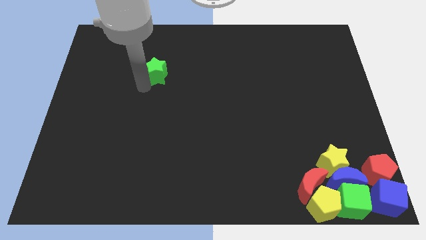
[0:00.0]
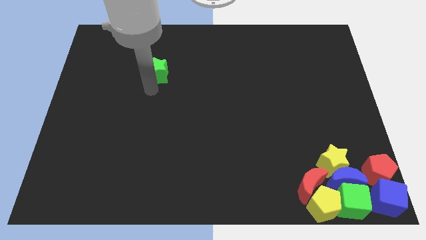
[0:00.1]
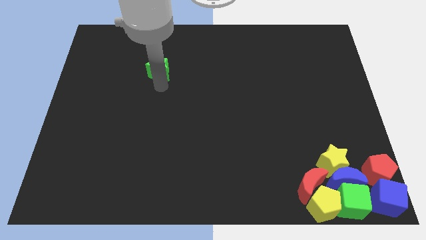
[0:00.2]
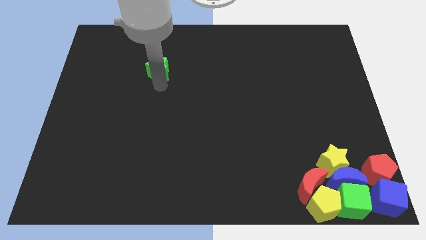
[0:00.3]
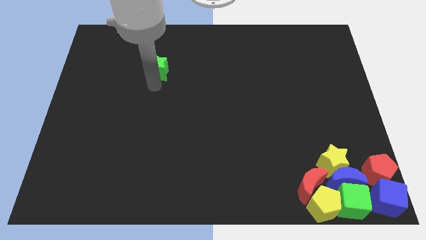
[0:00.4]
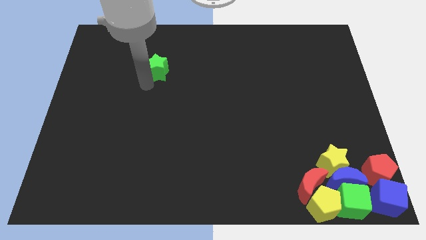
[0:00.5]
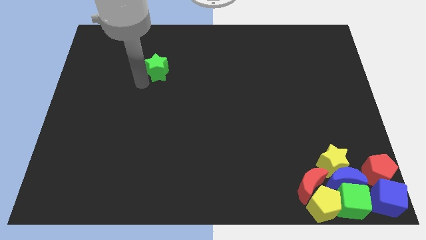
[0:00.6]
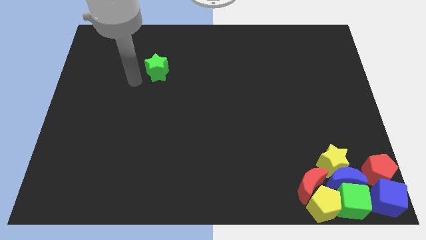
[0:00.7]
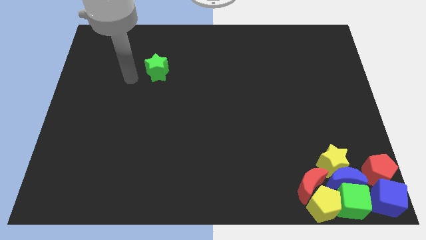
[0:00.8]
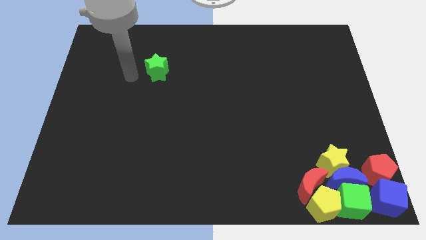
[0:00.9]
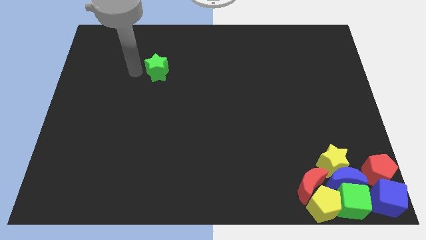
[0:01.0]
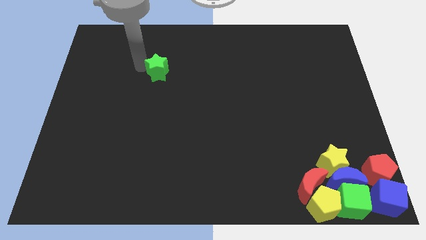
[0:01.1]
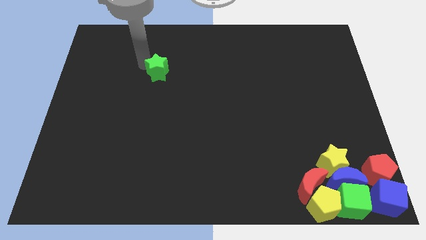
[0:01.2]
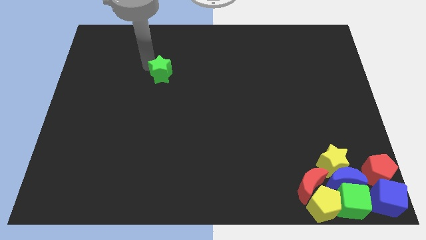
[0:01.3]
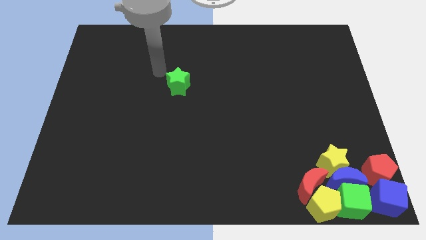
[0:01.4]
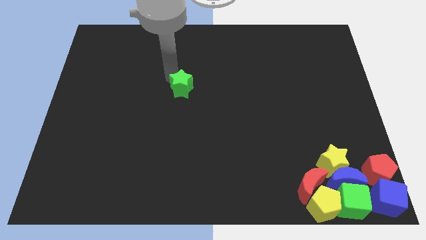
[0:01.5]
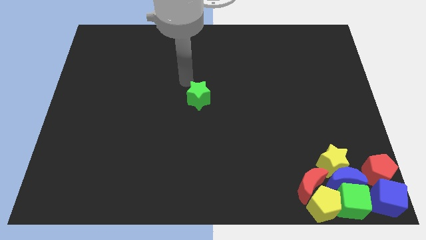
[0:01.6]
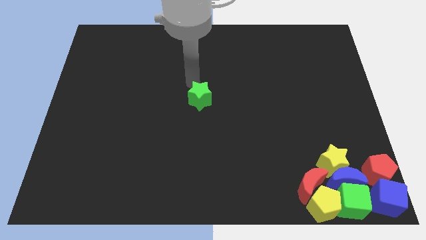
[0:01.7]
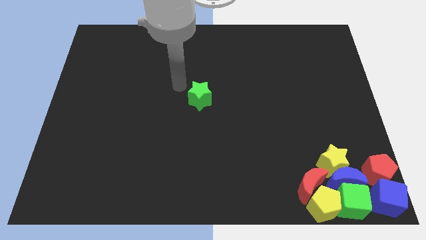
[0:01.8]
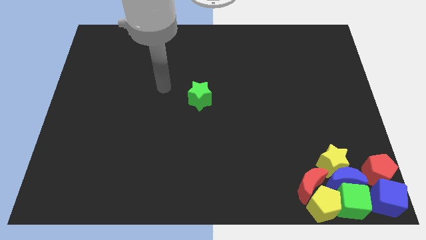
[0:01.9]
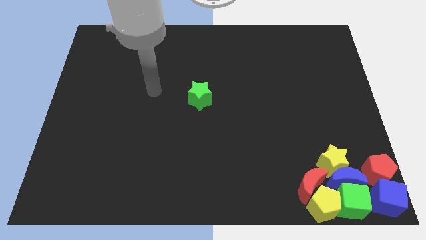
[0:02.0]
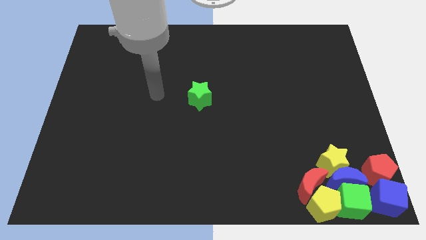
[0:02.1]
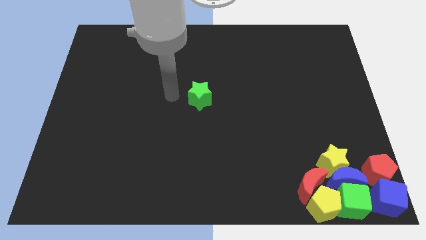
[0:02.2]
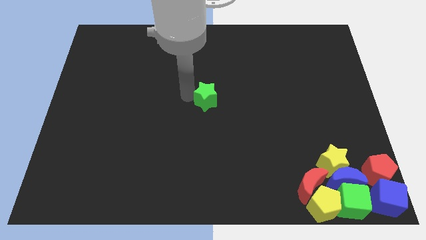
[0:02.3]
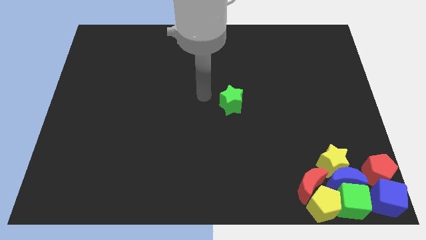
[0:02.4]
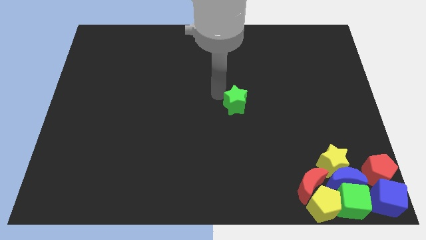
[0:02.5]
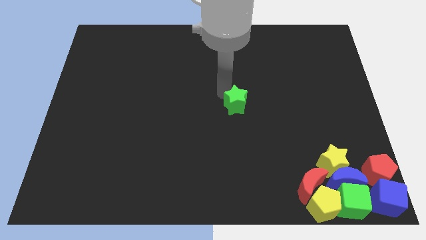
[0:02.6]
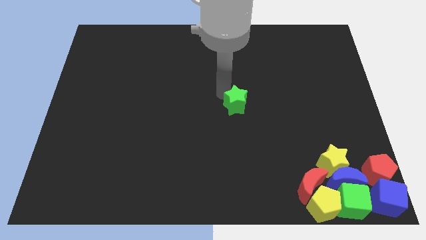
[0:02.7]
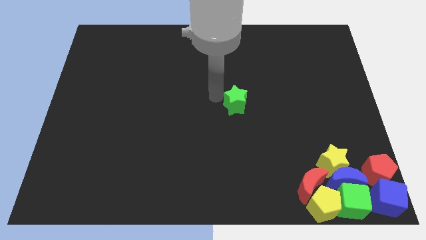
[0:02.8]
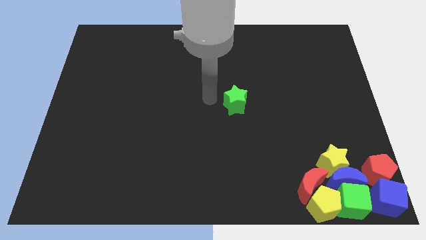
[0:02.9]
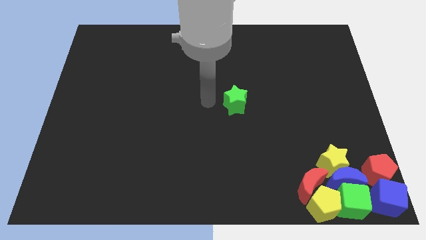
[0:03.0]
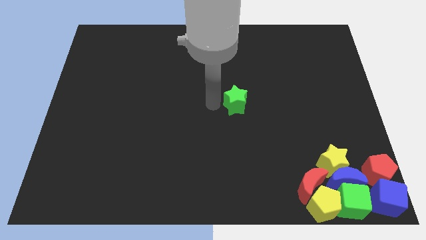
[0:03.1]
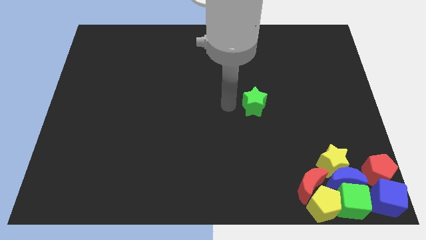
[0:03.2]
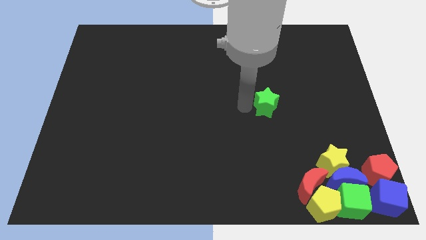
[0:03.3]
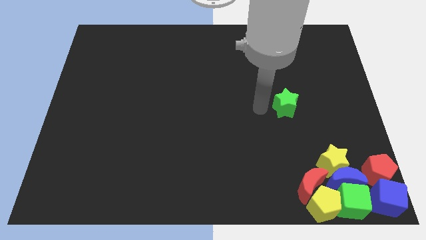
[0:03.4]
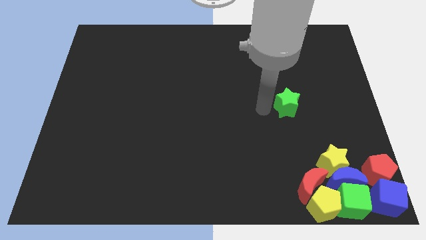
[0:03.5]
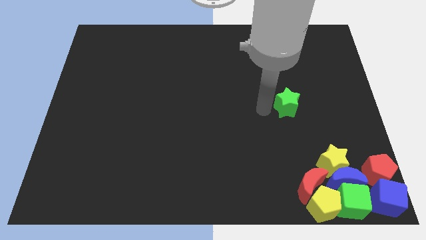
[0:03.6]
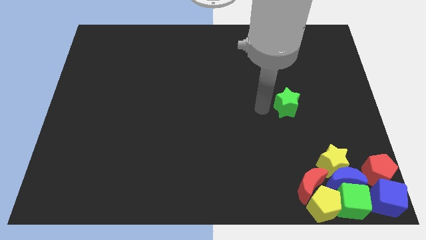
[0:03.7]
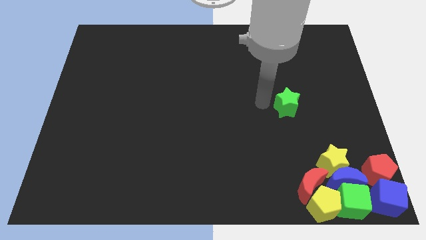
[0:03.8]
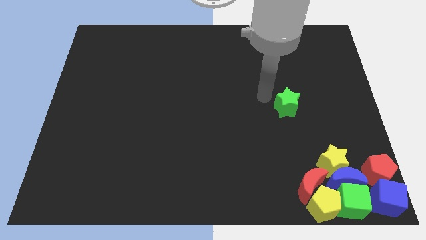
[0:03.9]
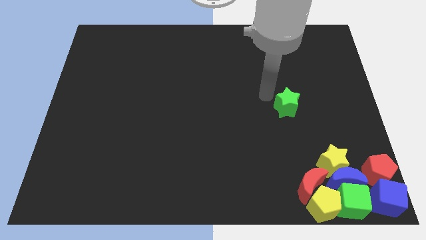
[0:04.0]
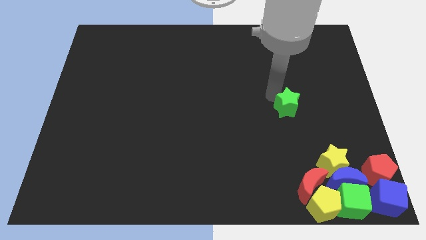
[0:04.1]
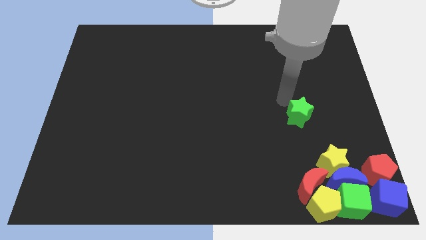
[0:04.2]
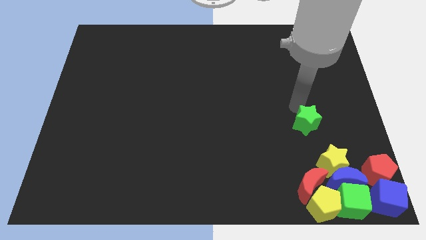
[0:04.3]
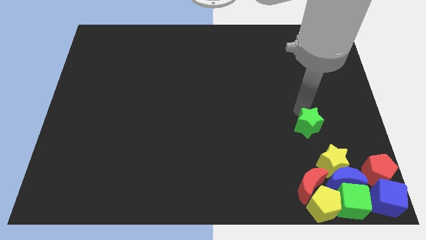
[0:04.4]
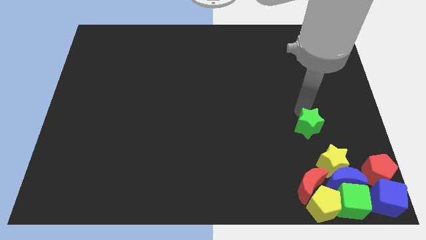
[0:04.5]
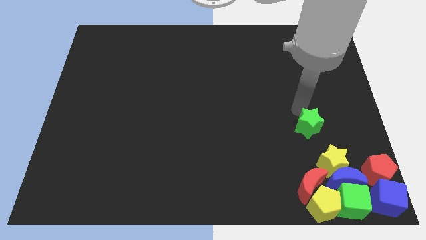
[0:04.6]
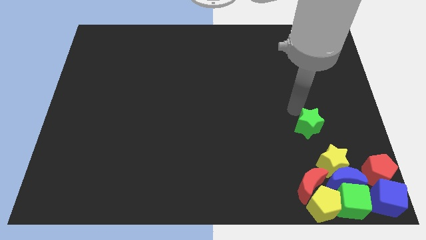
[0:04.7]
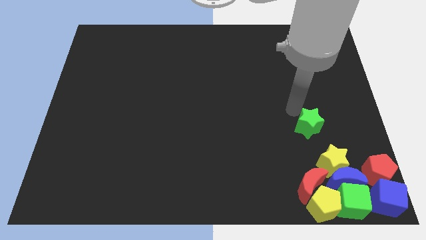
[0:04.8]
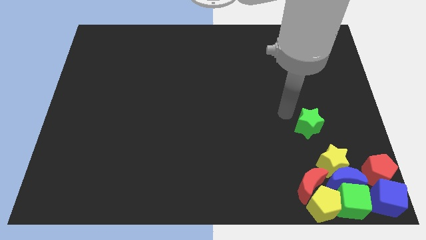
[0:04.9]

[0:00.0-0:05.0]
place the green star diagonally to red pentagon

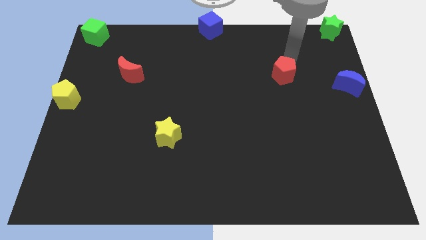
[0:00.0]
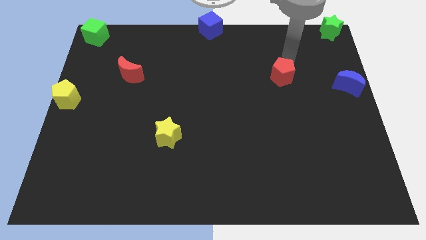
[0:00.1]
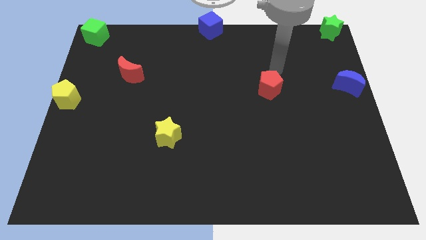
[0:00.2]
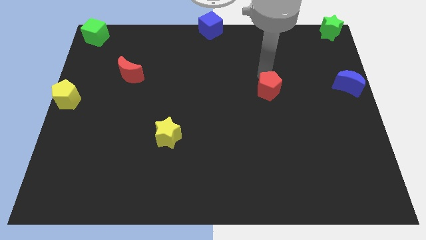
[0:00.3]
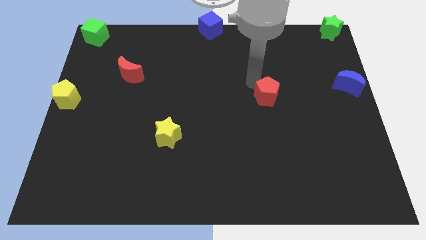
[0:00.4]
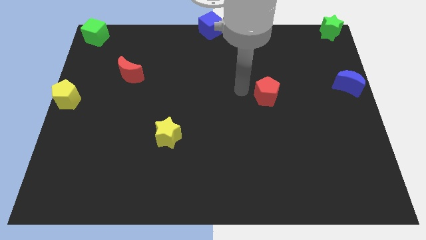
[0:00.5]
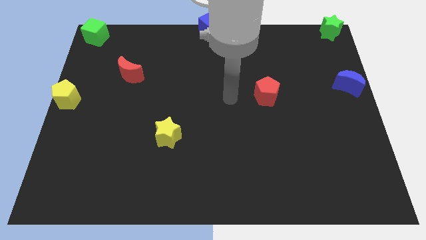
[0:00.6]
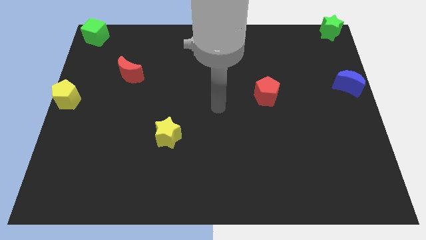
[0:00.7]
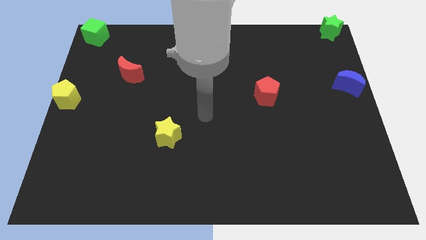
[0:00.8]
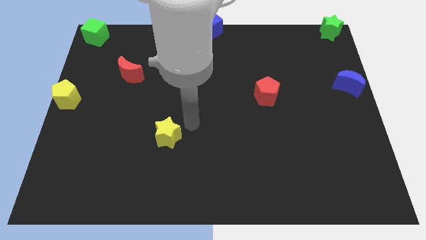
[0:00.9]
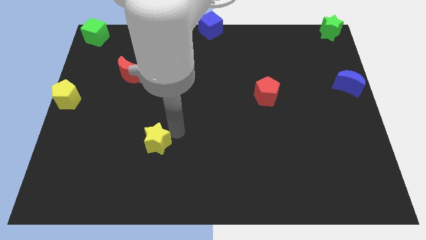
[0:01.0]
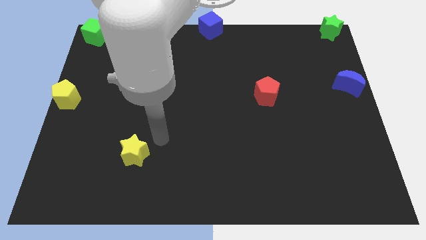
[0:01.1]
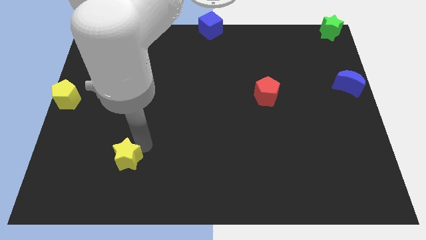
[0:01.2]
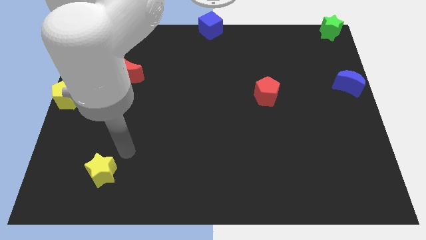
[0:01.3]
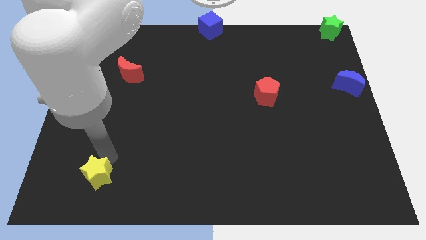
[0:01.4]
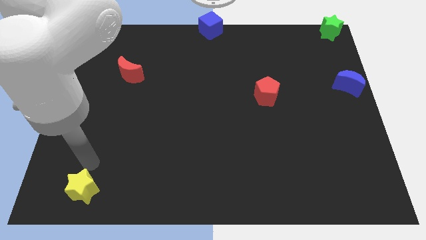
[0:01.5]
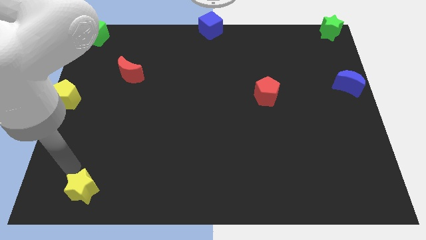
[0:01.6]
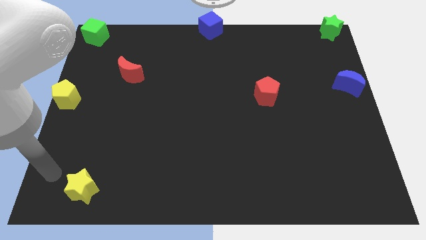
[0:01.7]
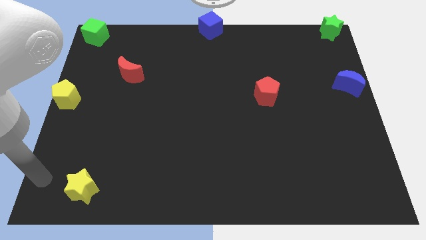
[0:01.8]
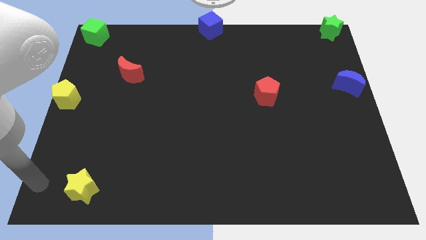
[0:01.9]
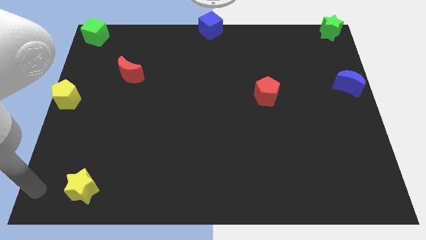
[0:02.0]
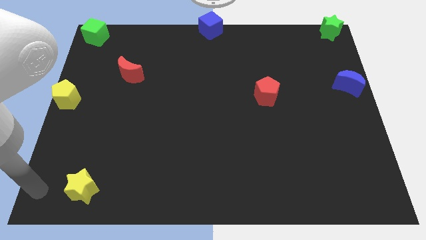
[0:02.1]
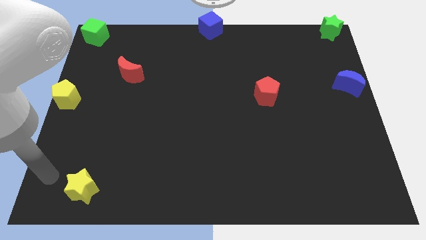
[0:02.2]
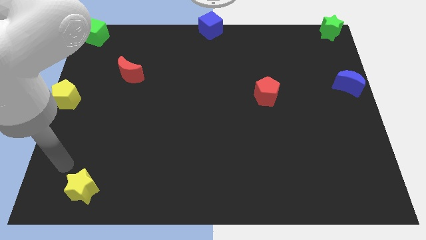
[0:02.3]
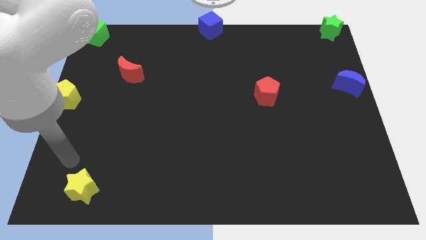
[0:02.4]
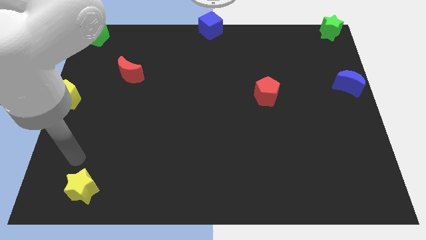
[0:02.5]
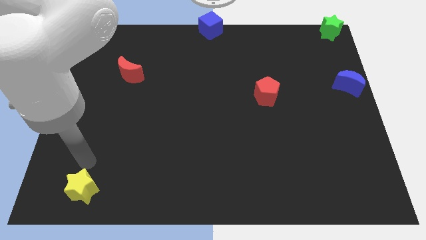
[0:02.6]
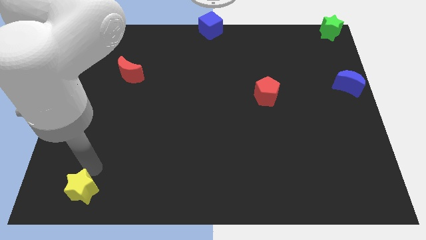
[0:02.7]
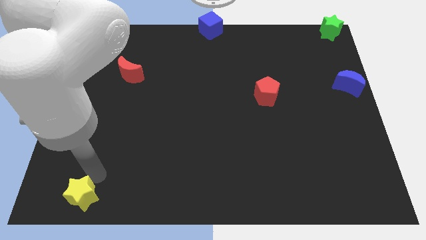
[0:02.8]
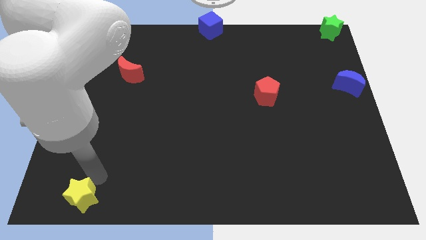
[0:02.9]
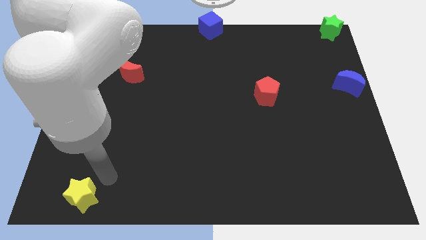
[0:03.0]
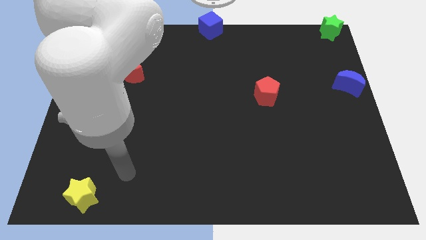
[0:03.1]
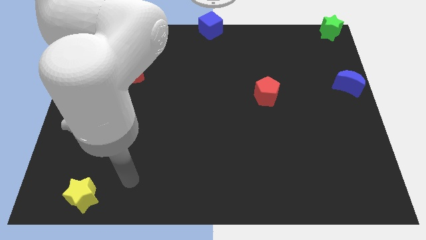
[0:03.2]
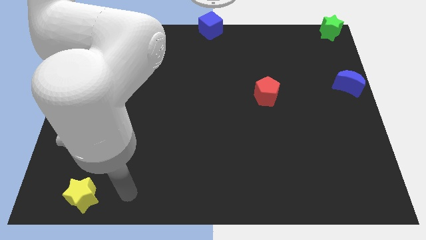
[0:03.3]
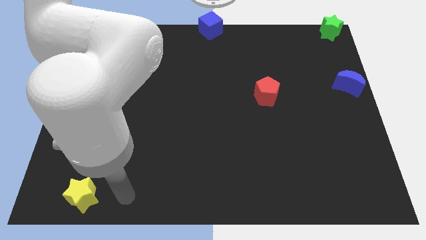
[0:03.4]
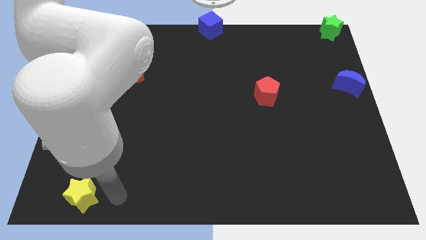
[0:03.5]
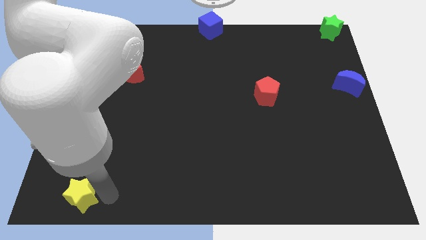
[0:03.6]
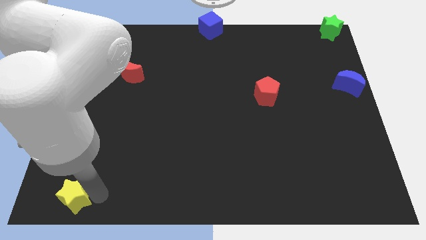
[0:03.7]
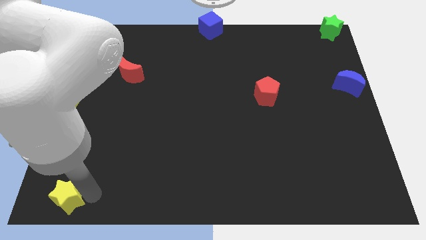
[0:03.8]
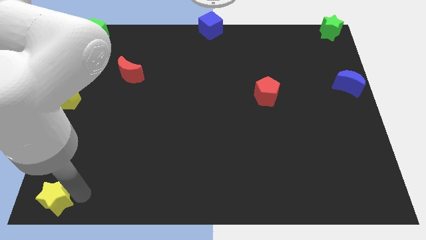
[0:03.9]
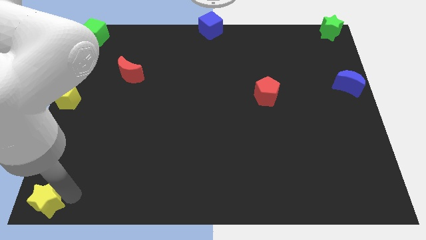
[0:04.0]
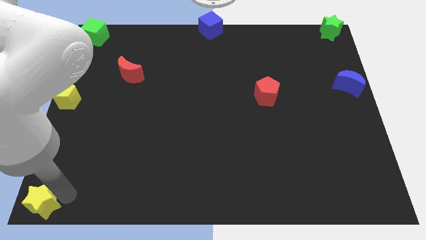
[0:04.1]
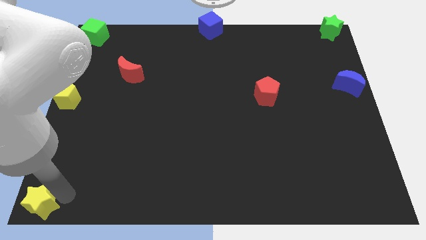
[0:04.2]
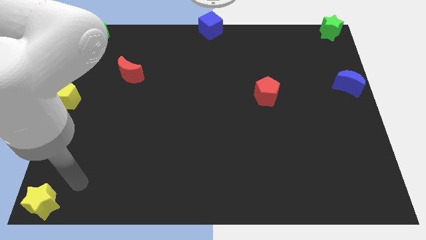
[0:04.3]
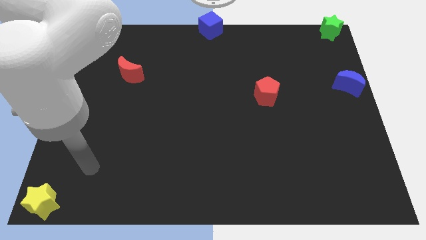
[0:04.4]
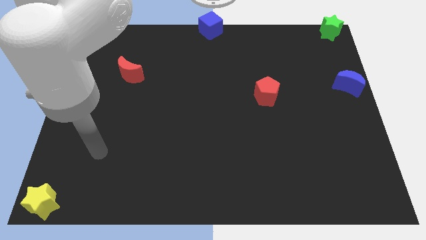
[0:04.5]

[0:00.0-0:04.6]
move yellow star to the bottom left corner of the board
